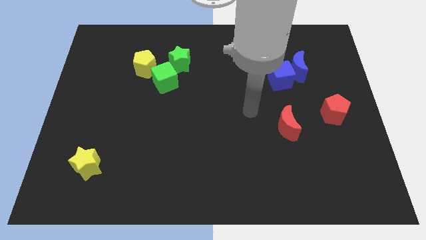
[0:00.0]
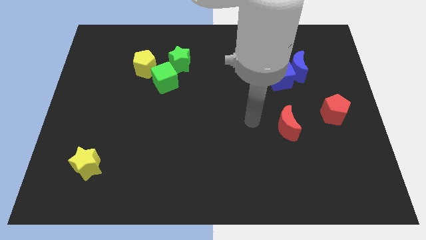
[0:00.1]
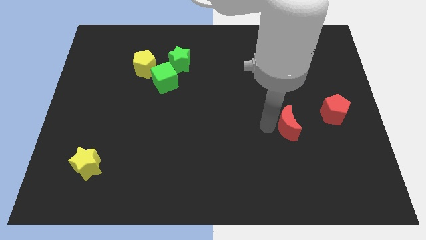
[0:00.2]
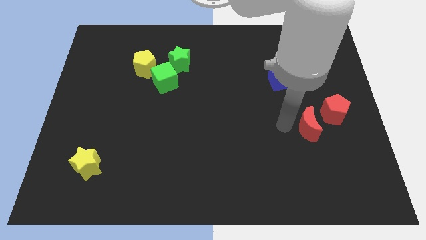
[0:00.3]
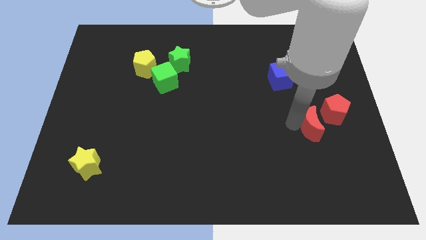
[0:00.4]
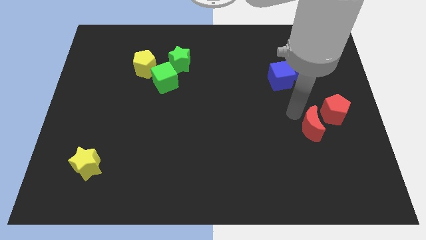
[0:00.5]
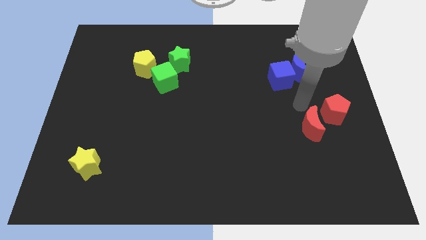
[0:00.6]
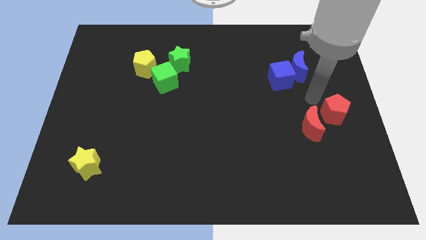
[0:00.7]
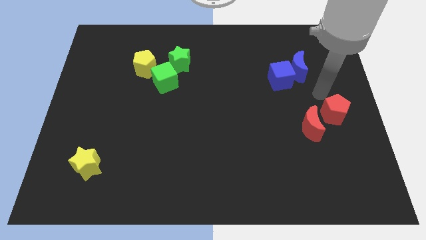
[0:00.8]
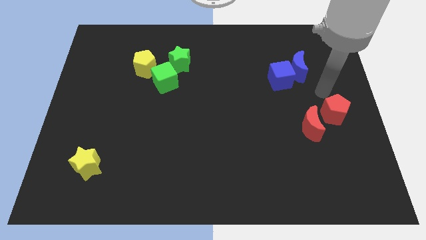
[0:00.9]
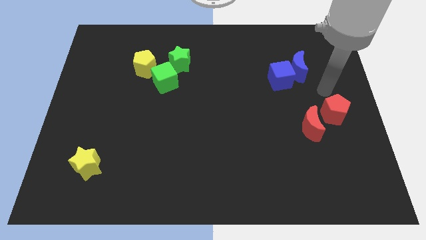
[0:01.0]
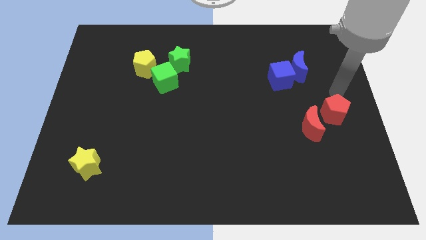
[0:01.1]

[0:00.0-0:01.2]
push the red crescent close to the red pentagon

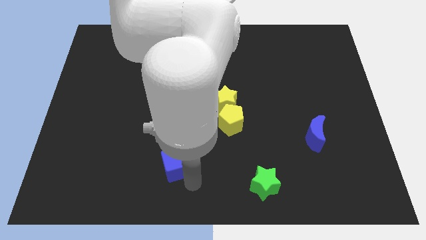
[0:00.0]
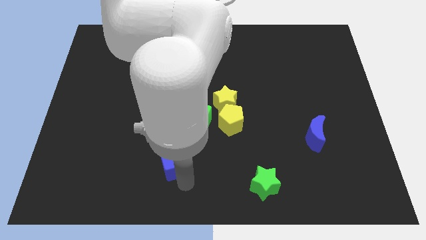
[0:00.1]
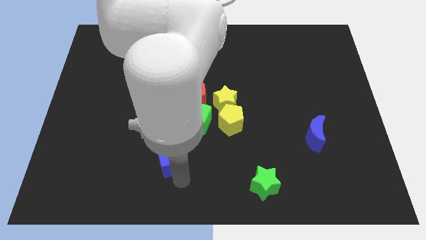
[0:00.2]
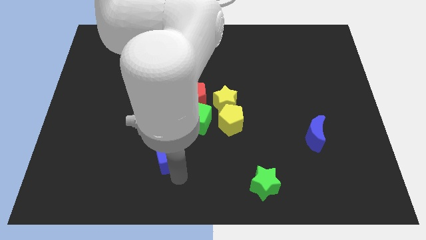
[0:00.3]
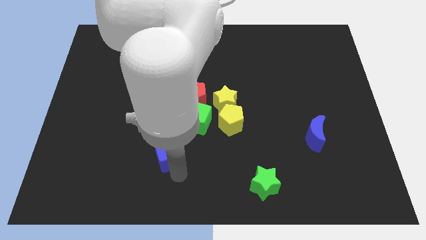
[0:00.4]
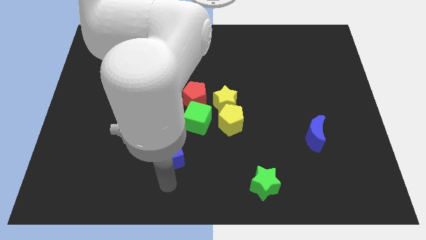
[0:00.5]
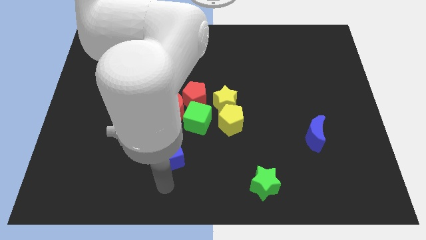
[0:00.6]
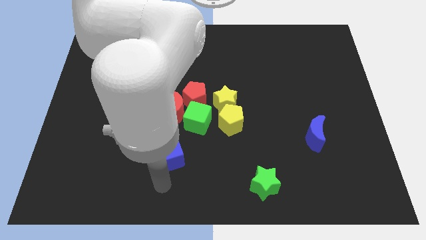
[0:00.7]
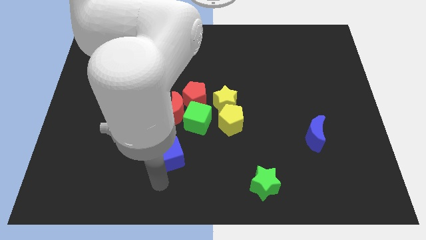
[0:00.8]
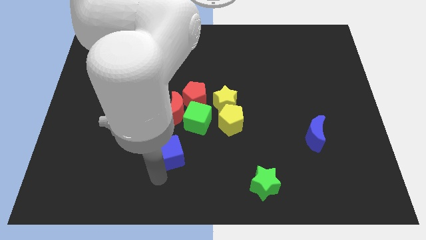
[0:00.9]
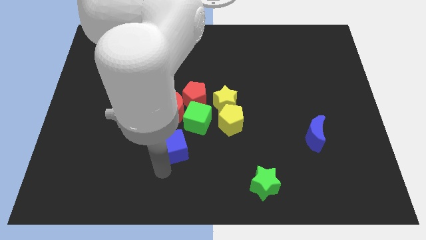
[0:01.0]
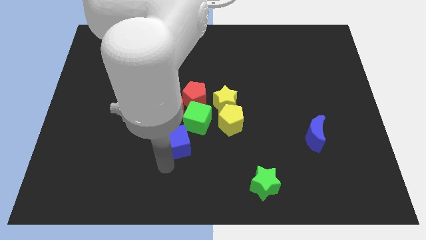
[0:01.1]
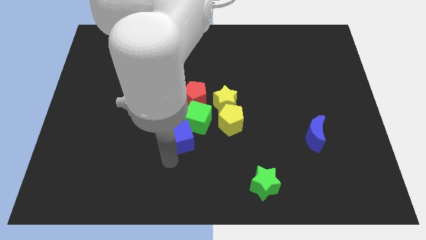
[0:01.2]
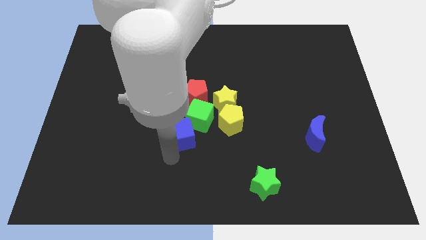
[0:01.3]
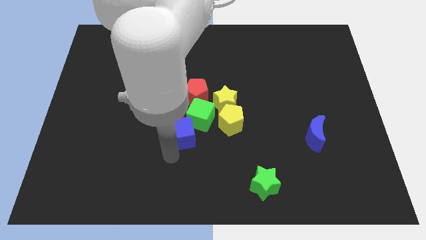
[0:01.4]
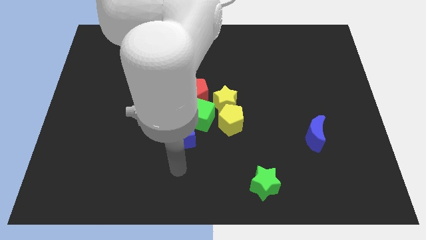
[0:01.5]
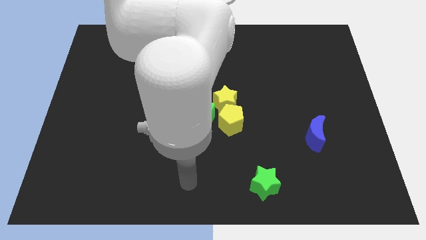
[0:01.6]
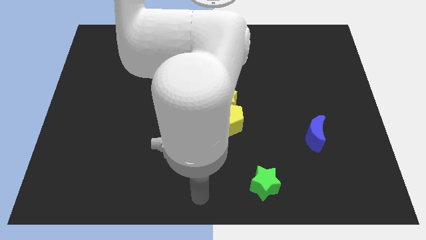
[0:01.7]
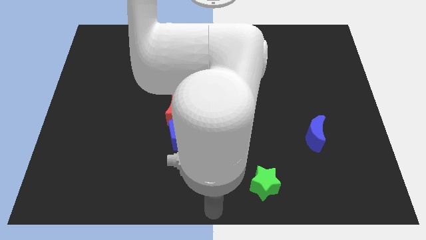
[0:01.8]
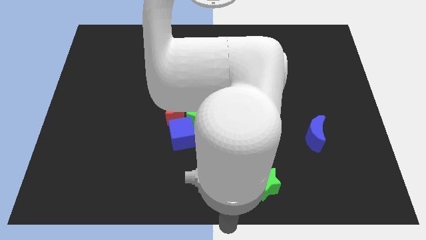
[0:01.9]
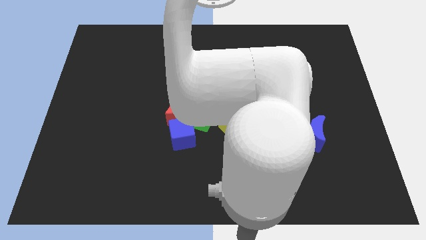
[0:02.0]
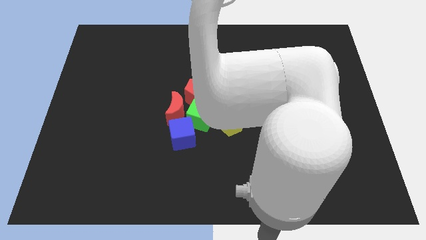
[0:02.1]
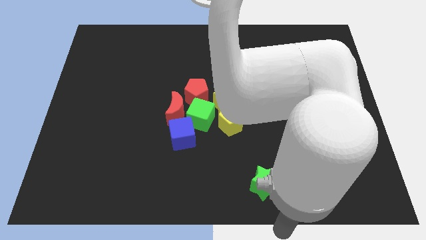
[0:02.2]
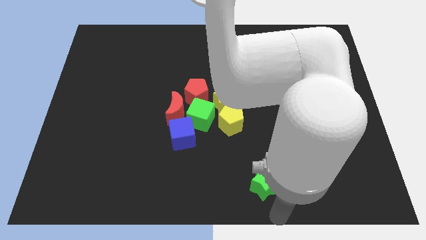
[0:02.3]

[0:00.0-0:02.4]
move the blue cube below to the red moon

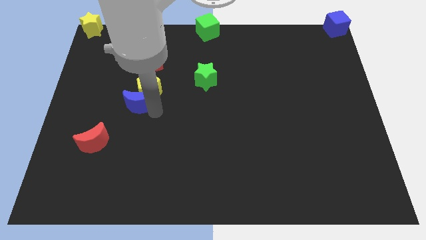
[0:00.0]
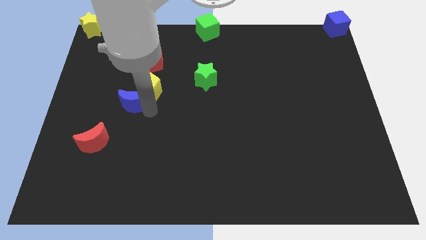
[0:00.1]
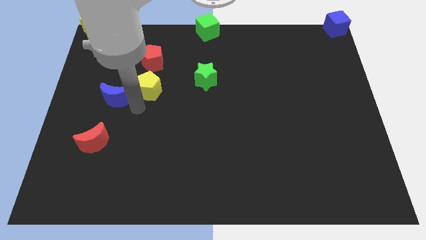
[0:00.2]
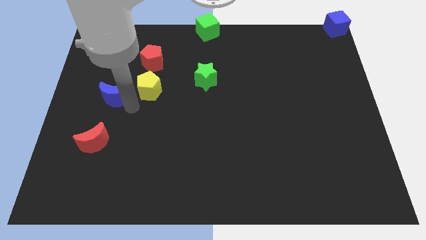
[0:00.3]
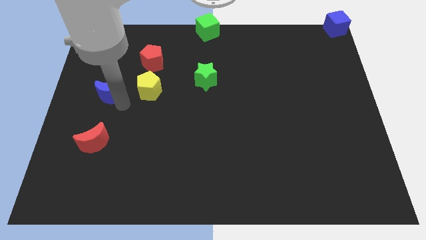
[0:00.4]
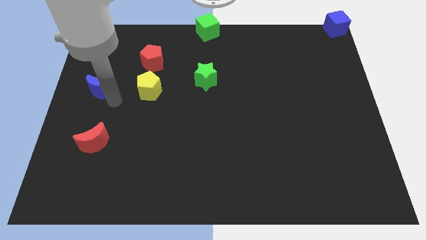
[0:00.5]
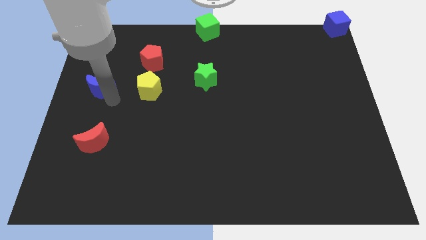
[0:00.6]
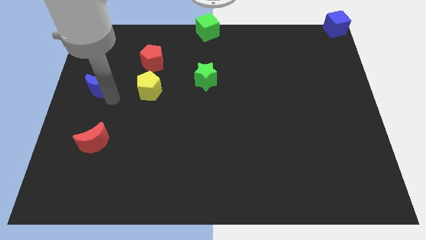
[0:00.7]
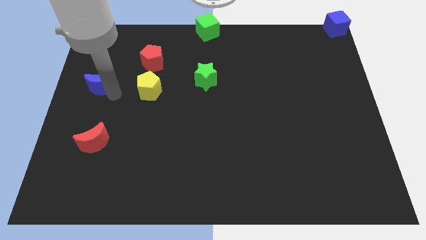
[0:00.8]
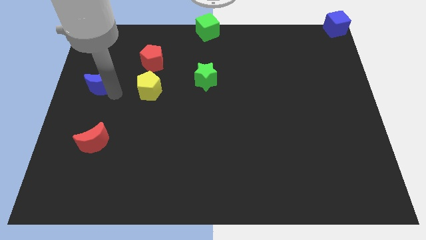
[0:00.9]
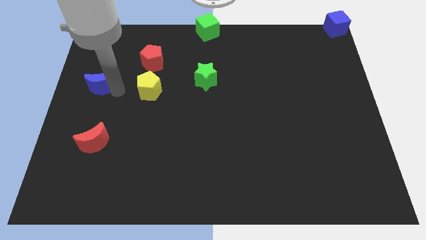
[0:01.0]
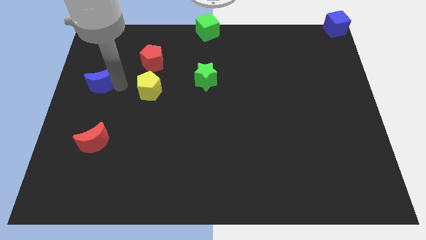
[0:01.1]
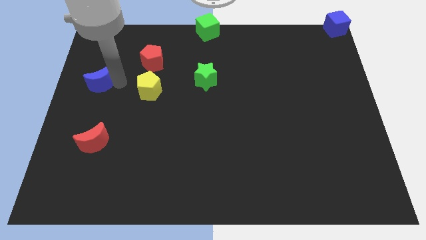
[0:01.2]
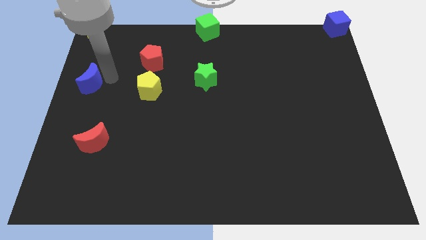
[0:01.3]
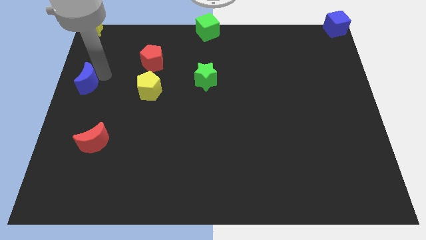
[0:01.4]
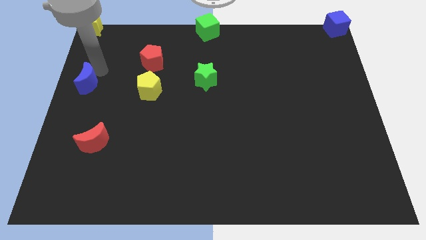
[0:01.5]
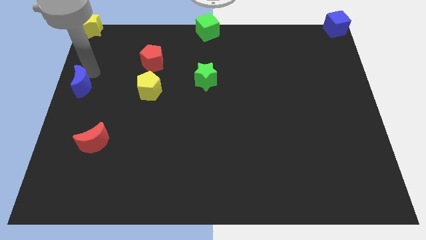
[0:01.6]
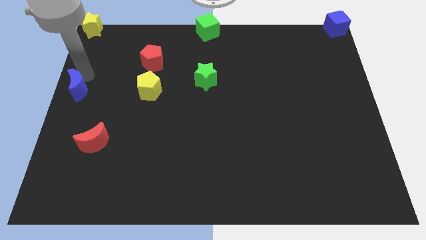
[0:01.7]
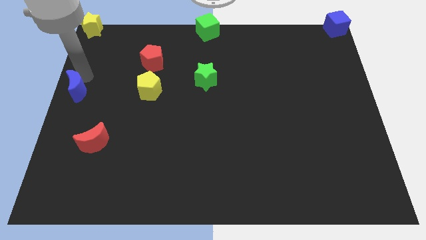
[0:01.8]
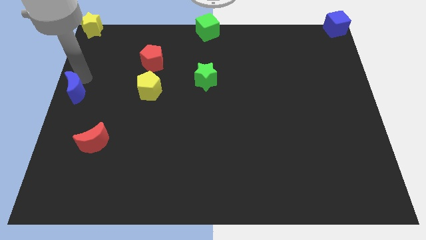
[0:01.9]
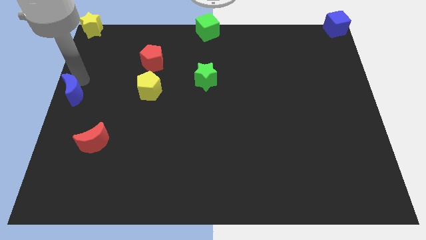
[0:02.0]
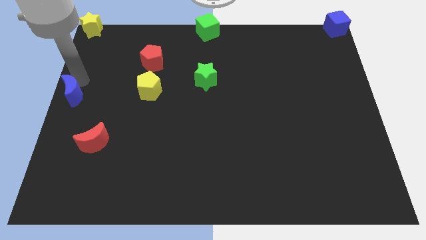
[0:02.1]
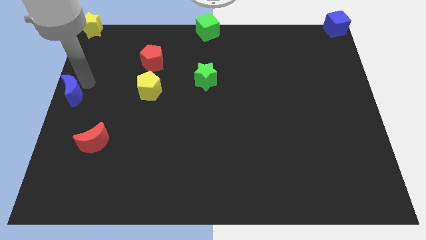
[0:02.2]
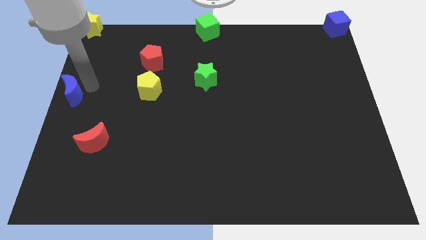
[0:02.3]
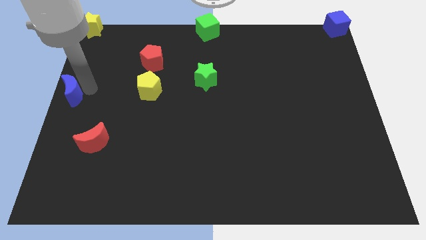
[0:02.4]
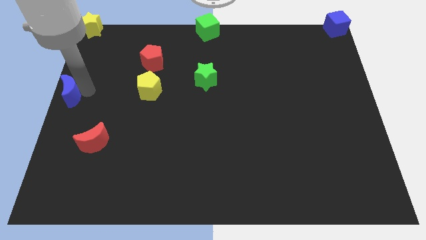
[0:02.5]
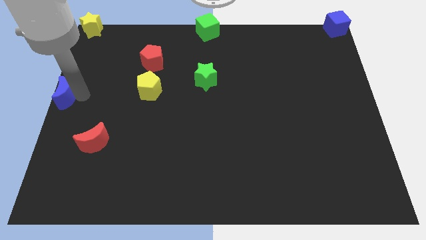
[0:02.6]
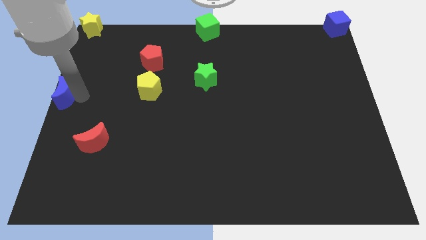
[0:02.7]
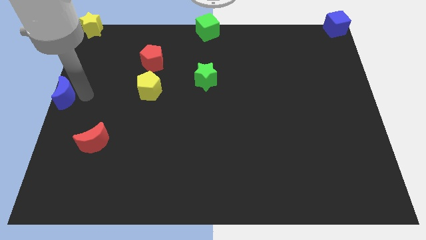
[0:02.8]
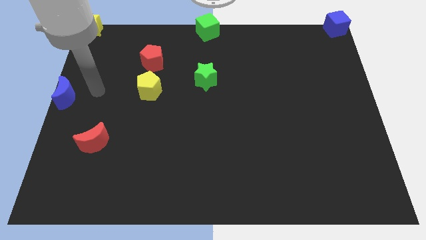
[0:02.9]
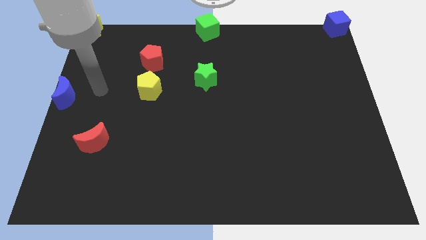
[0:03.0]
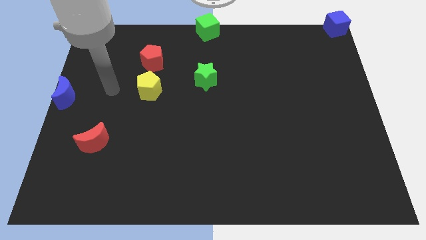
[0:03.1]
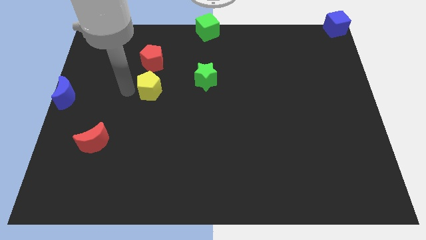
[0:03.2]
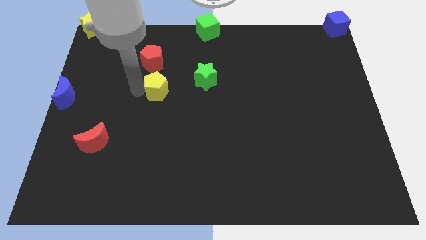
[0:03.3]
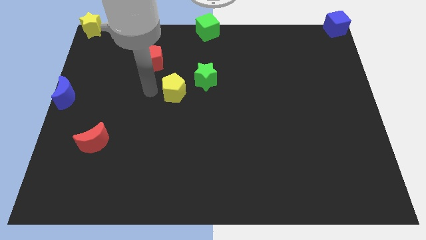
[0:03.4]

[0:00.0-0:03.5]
move the blue moon to the center left

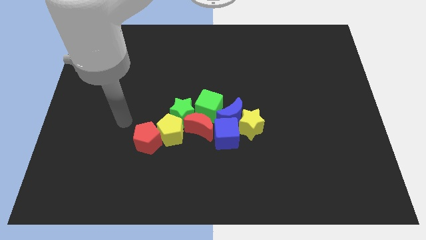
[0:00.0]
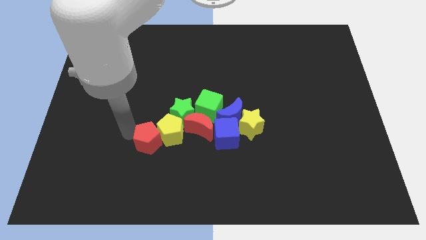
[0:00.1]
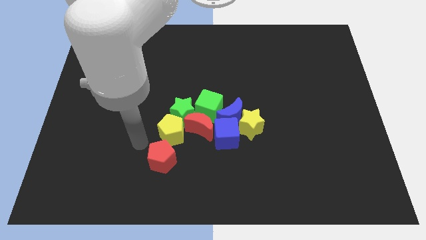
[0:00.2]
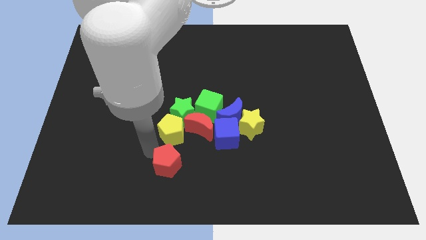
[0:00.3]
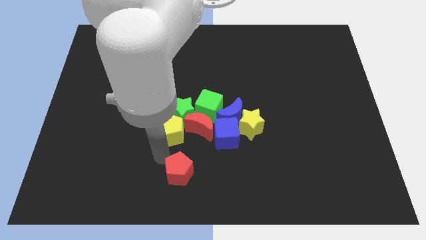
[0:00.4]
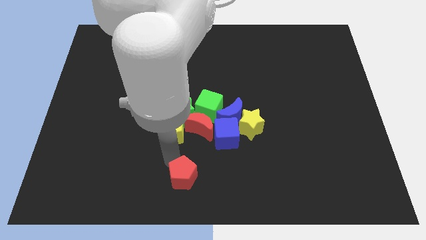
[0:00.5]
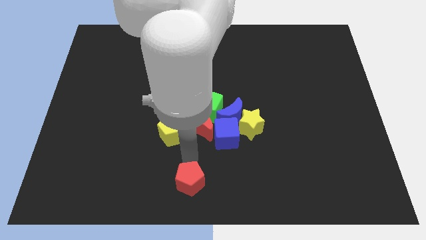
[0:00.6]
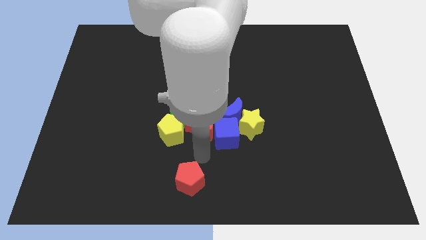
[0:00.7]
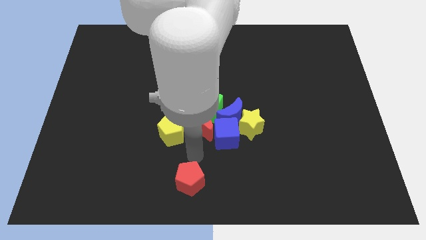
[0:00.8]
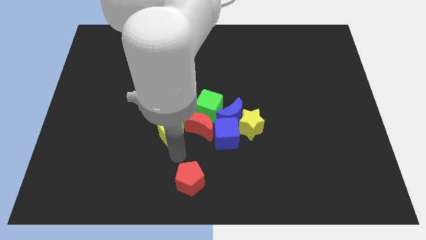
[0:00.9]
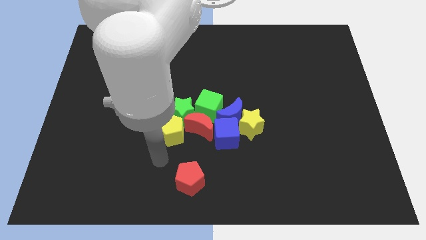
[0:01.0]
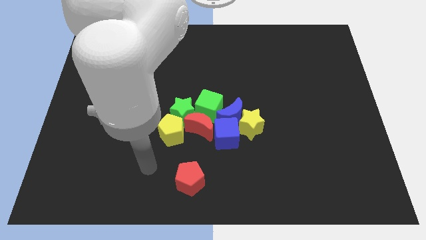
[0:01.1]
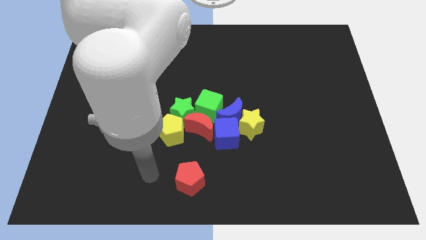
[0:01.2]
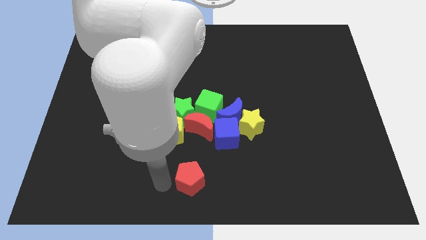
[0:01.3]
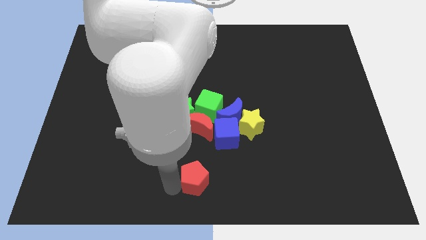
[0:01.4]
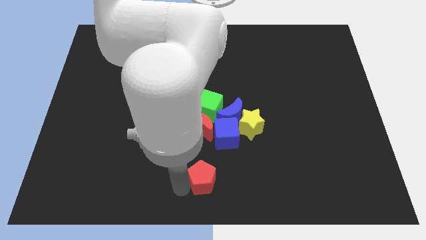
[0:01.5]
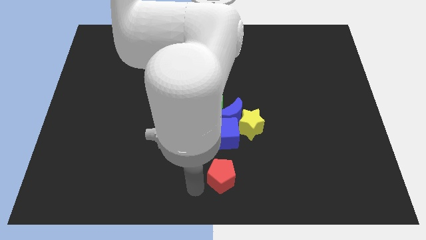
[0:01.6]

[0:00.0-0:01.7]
place the red pentagon below the red crescent
